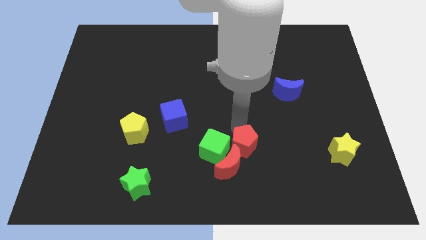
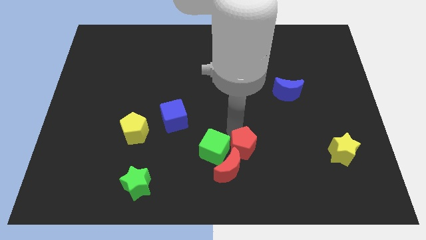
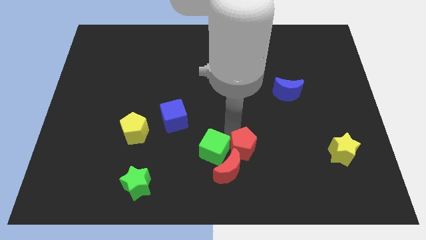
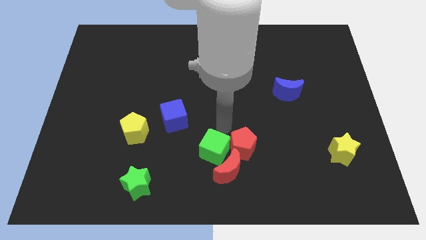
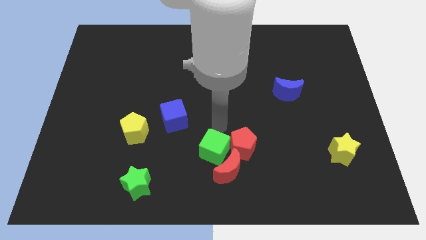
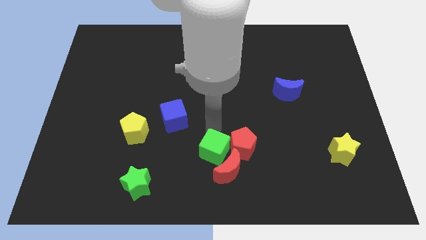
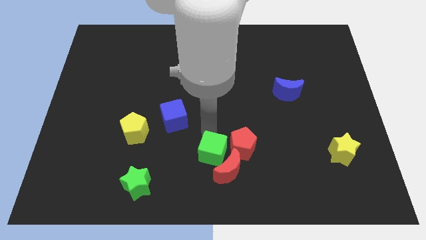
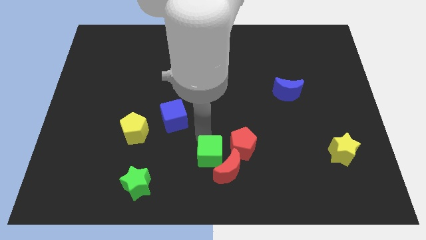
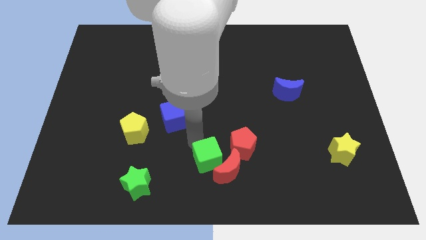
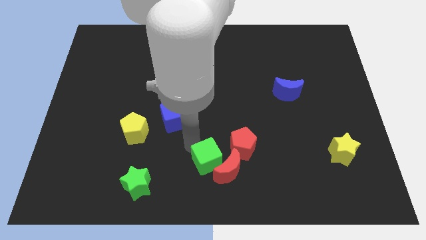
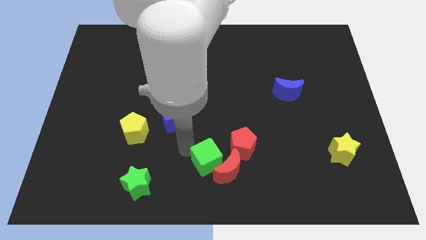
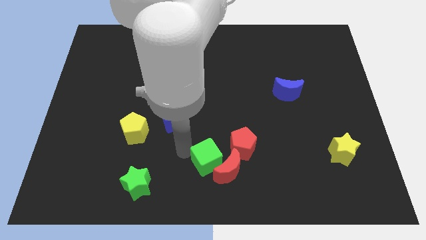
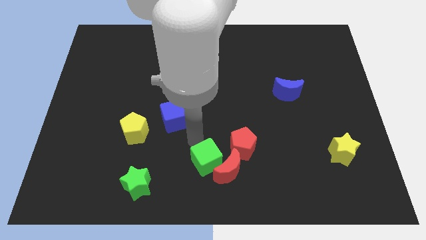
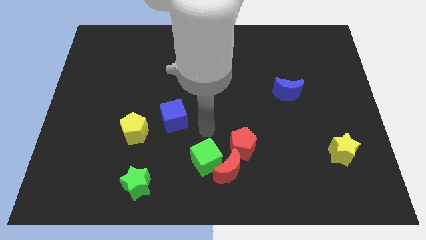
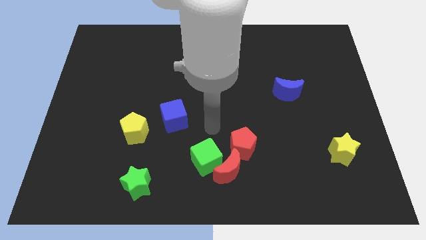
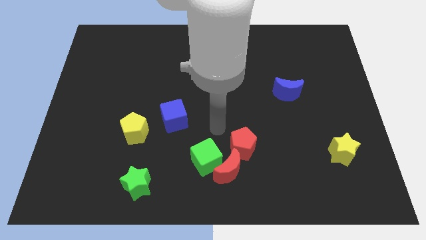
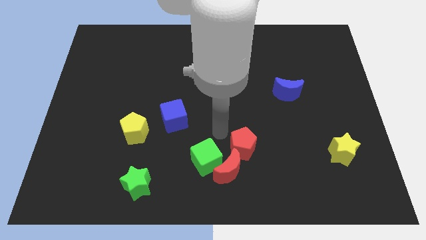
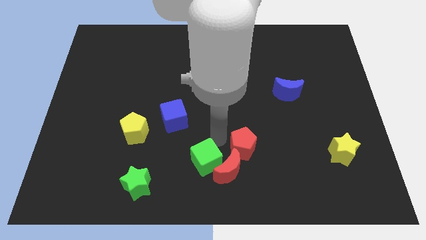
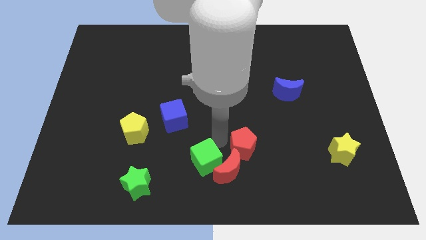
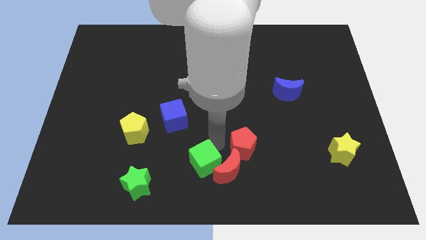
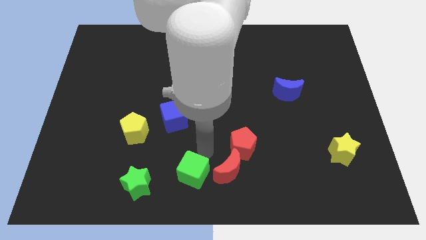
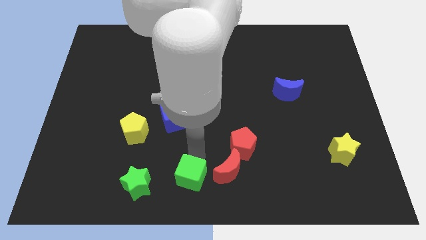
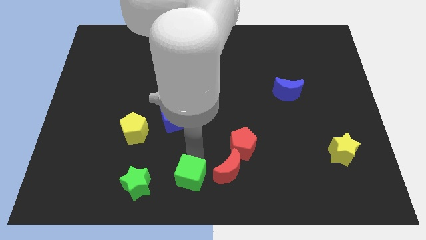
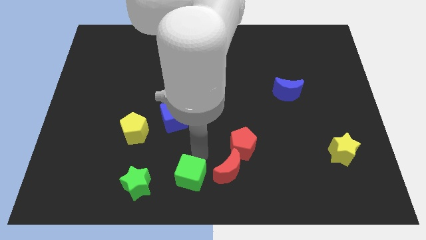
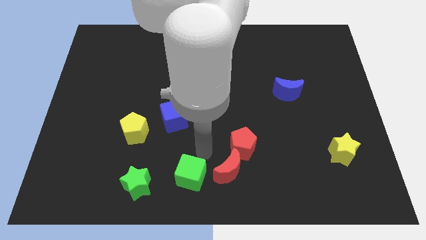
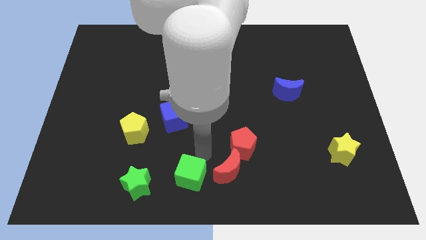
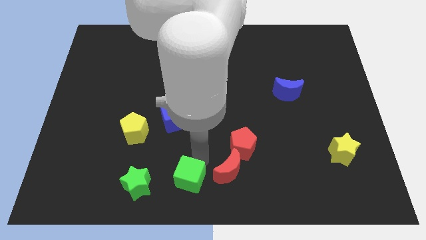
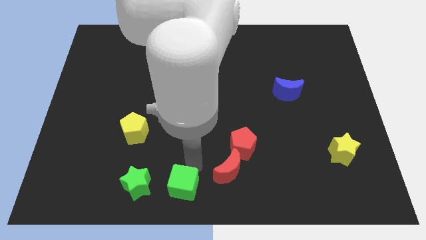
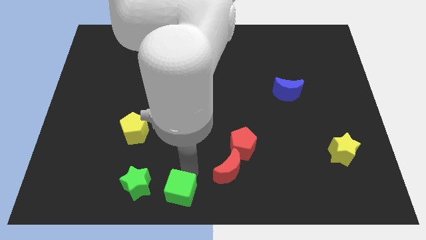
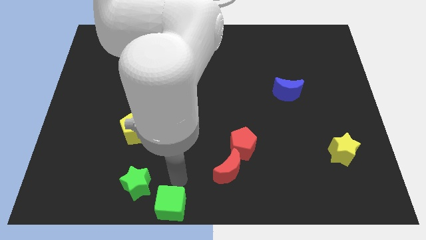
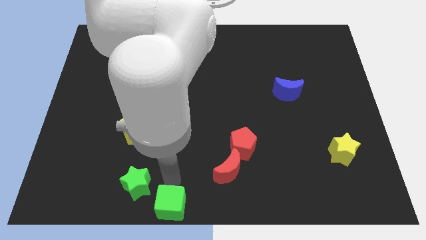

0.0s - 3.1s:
push the green cube to the bottom side of the board

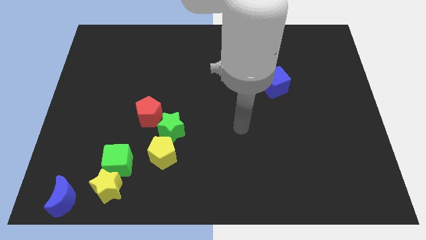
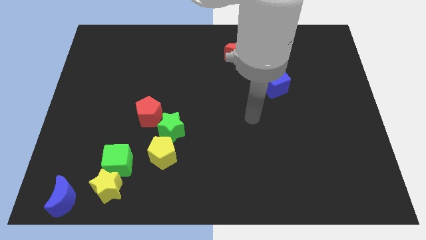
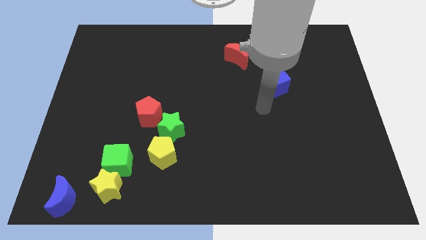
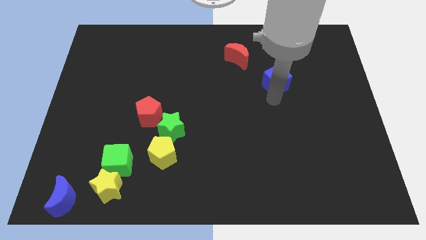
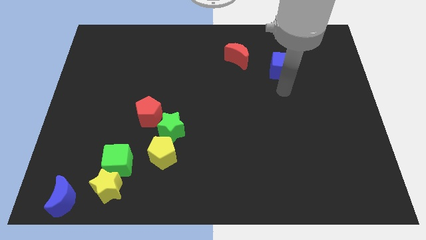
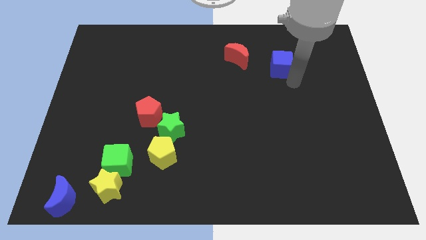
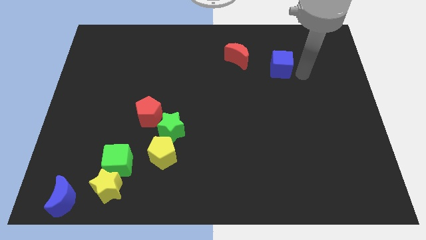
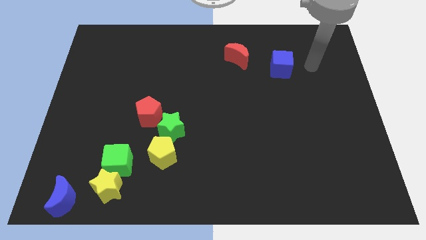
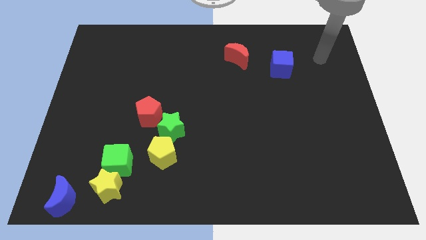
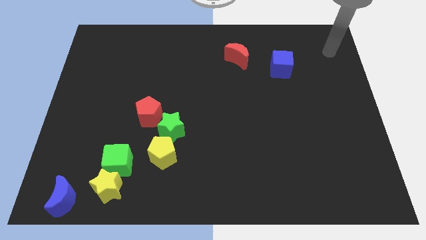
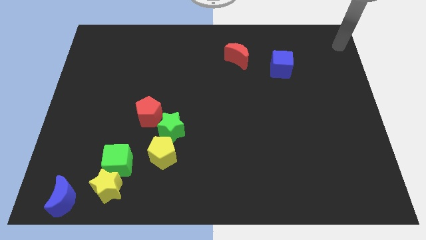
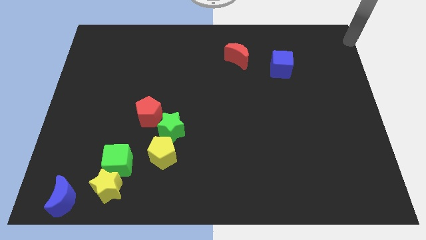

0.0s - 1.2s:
point your hand at the top right corner

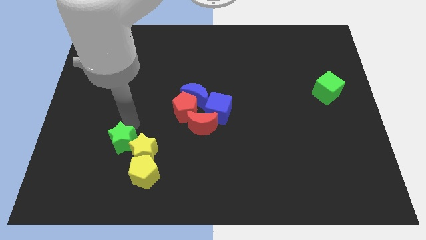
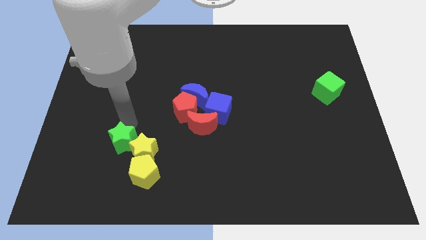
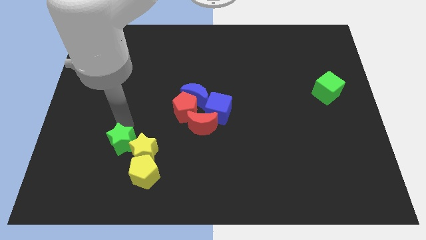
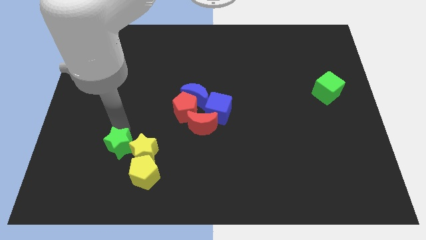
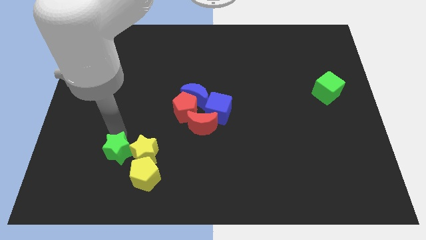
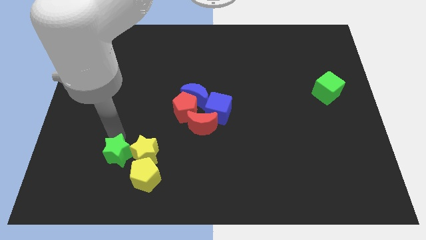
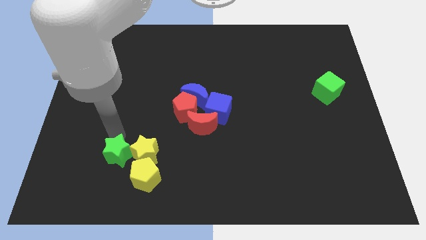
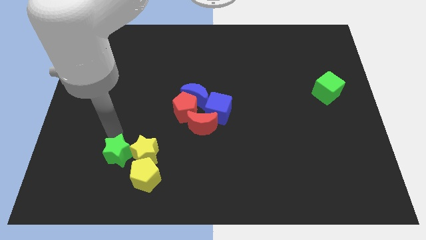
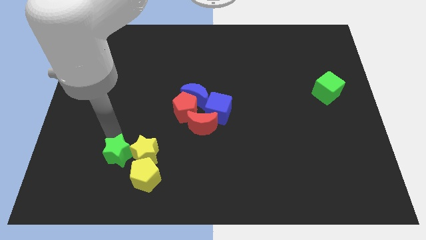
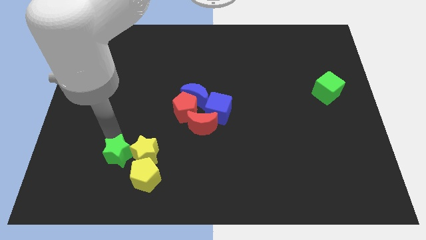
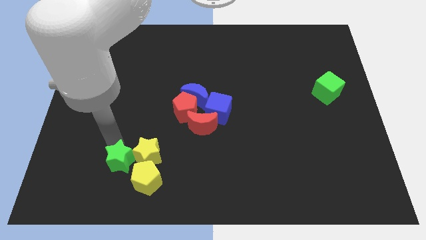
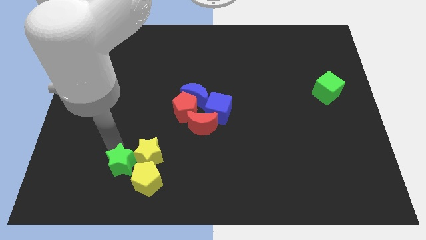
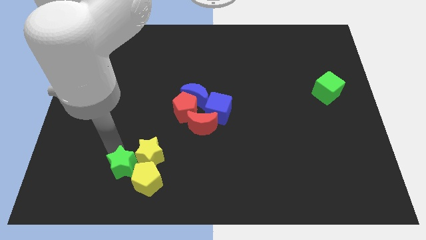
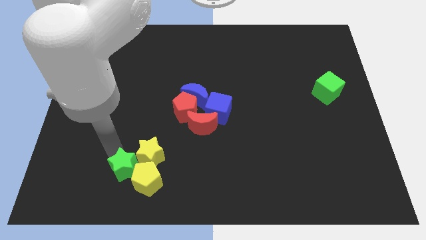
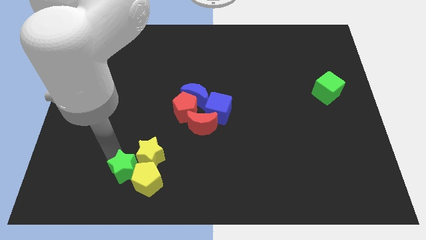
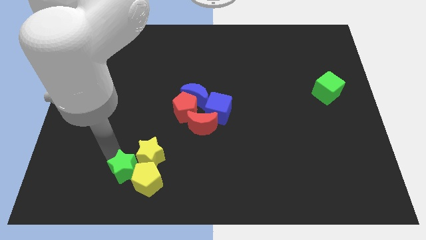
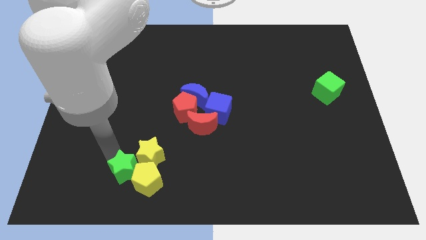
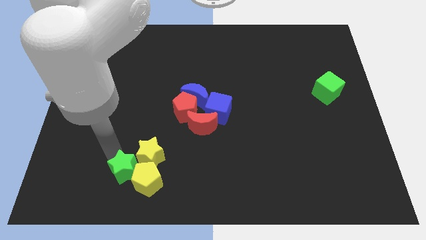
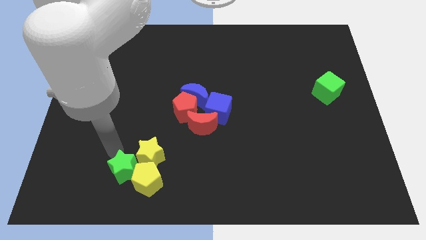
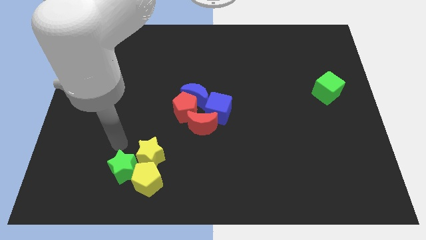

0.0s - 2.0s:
move the green star to the left side of the yellow pentagon

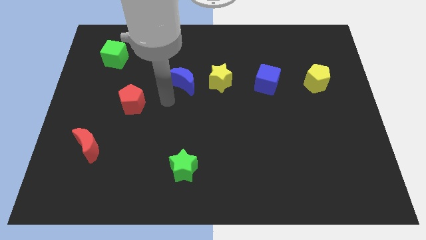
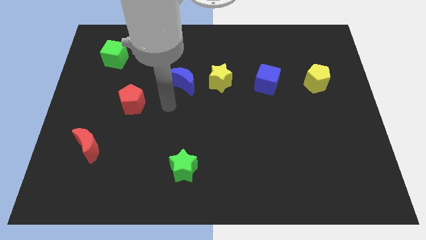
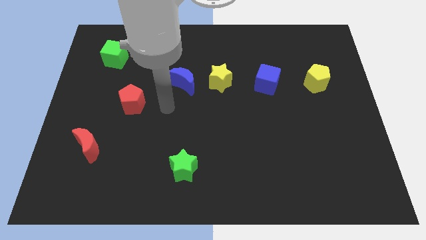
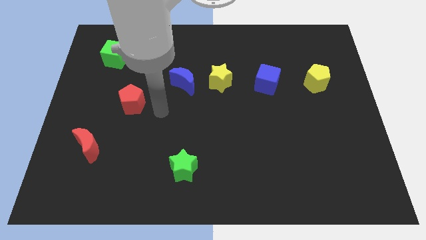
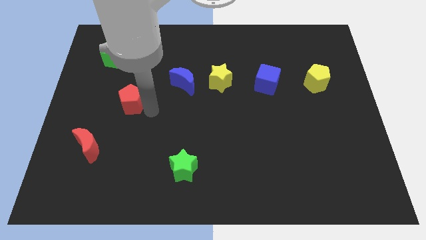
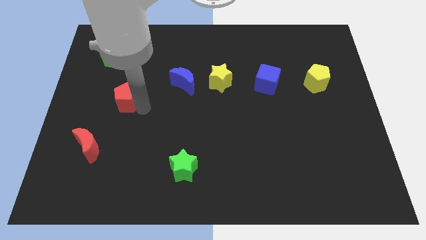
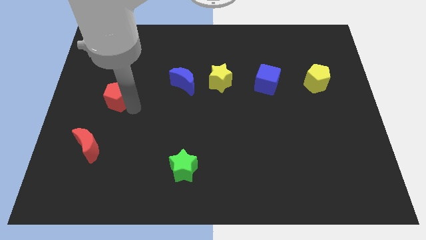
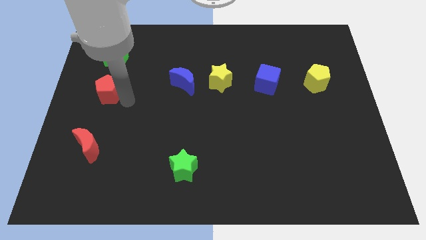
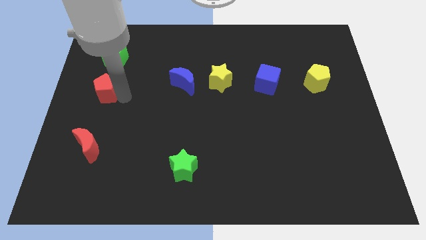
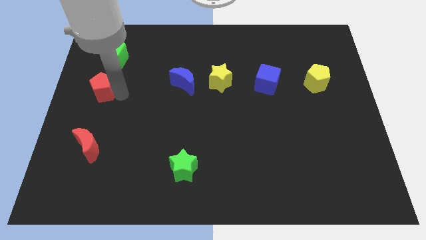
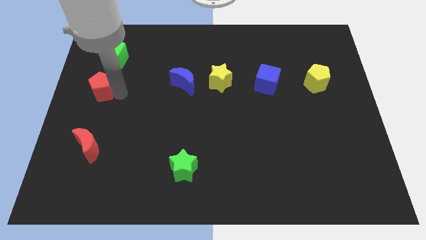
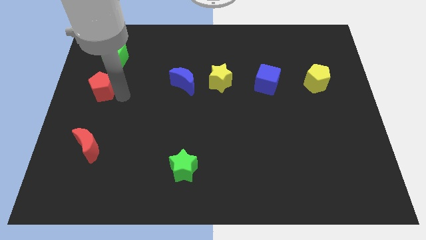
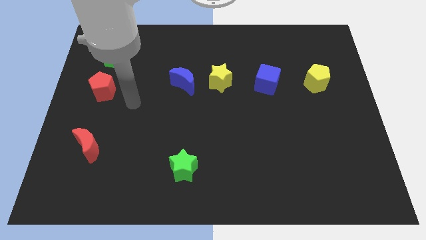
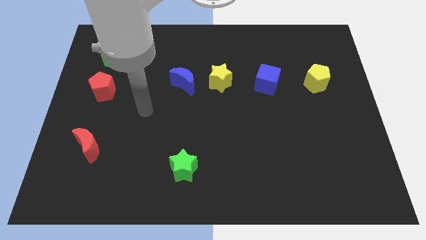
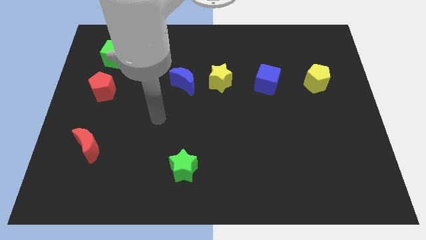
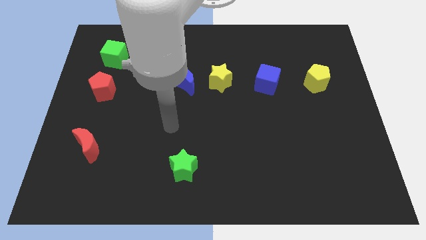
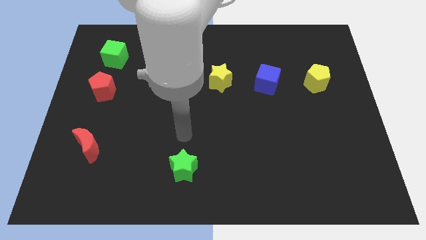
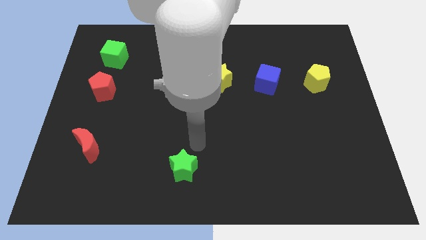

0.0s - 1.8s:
place the red pentagon below the green cube

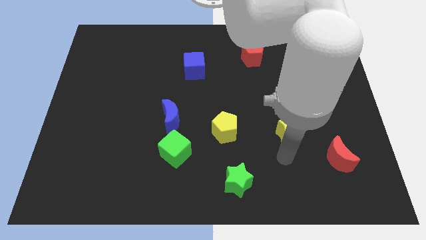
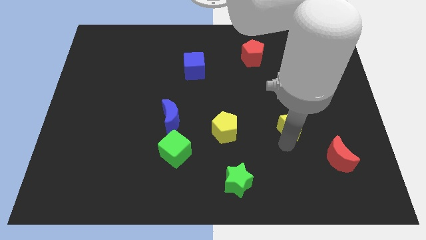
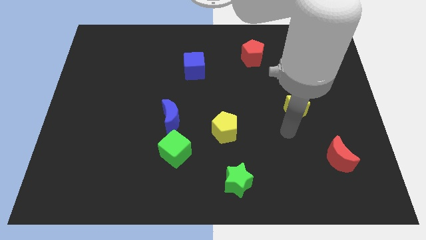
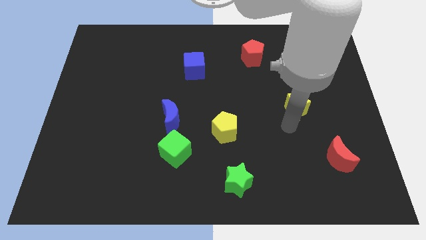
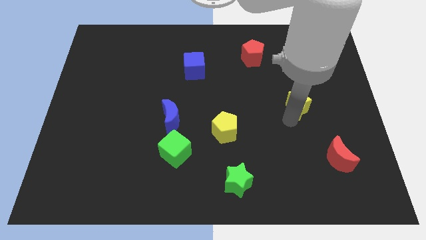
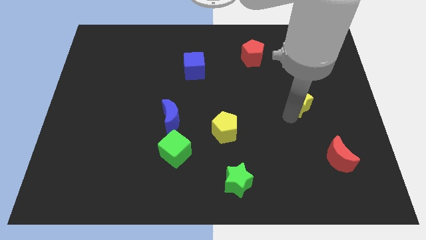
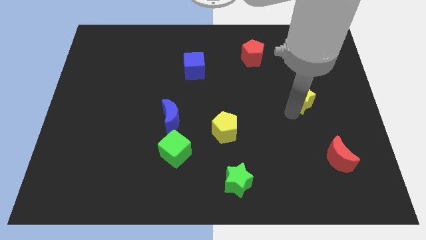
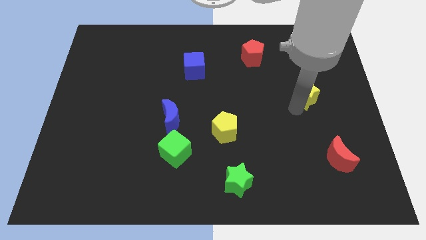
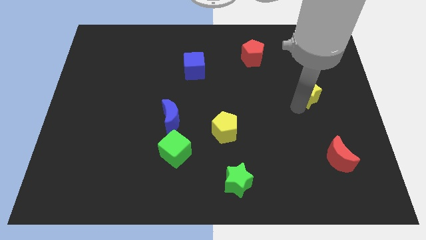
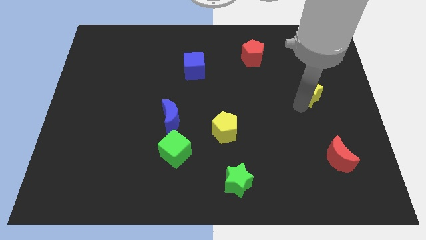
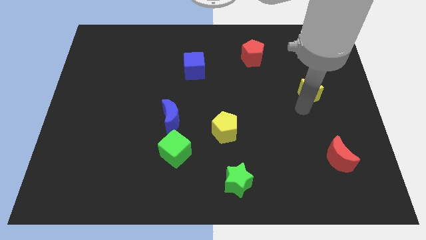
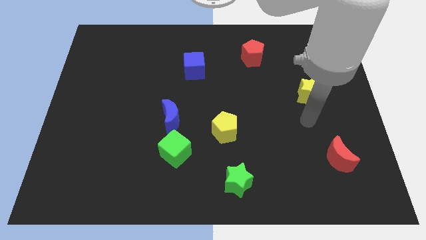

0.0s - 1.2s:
slide the yellow star diagonally top right to the yellow pentagon
